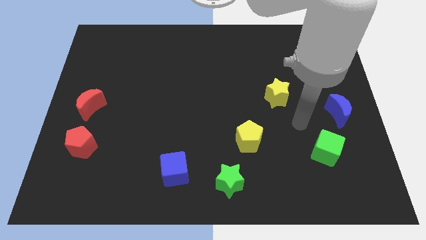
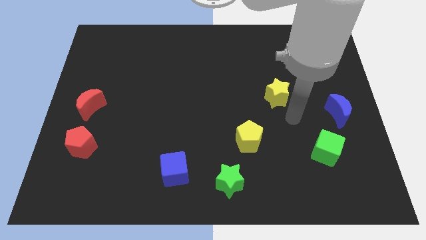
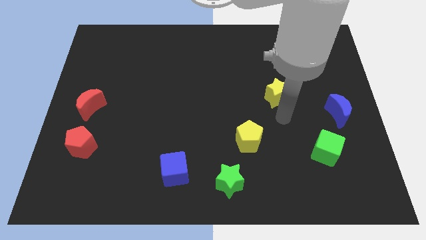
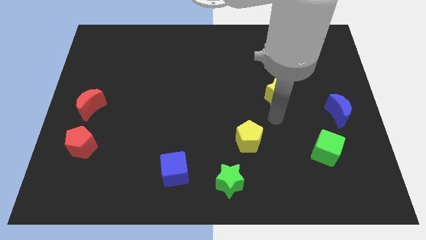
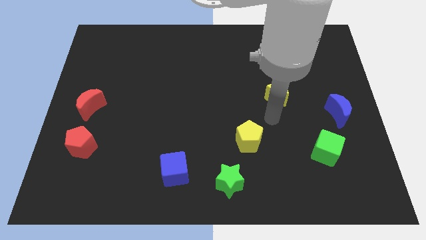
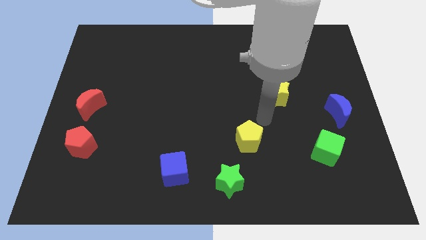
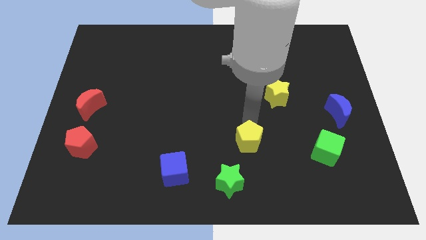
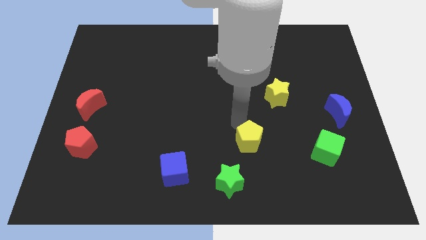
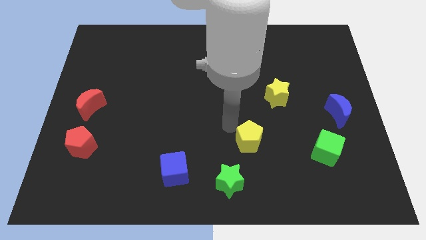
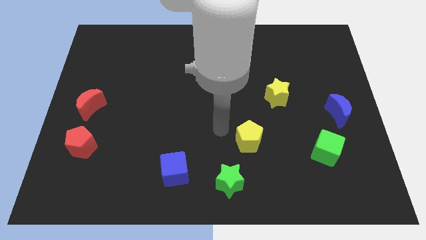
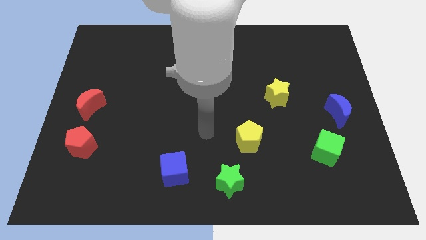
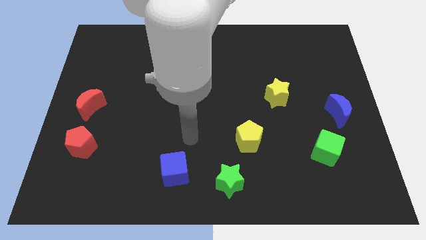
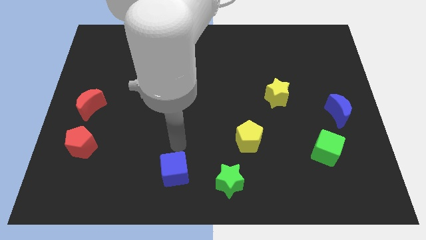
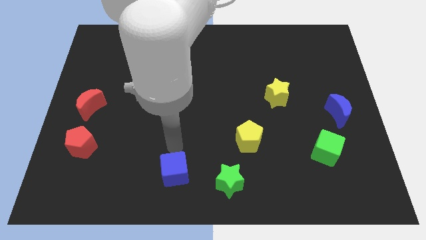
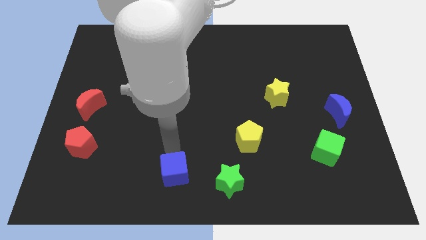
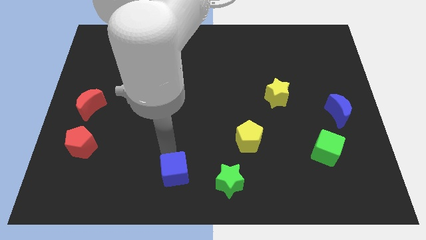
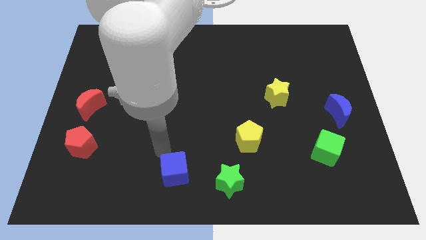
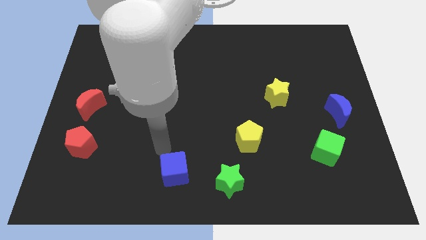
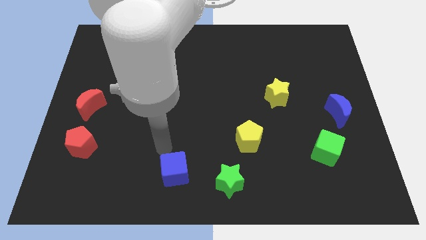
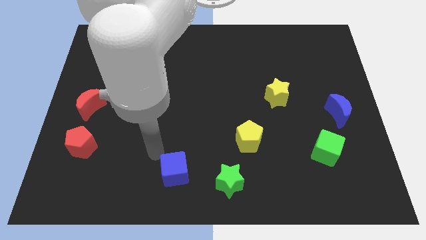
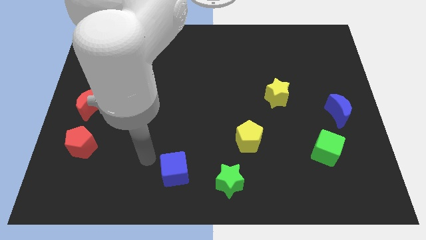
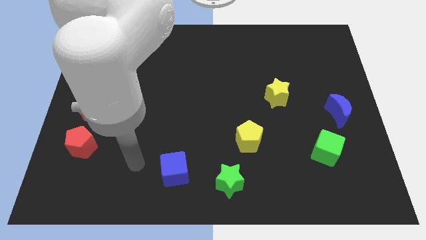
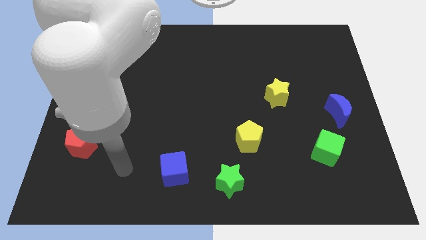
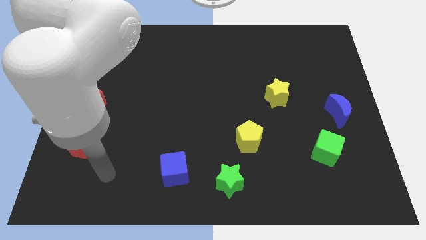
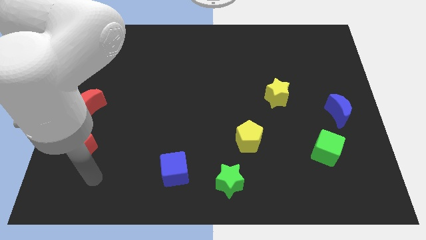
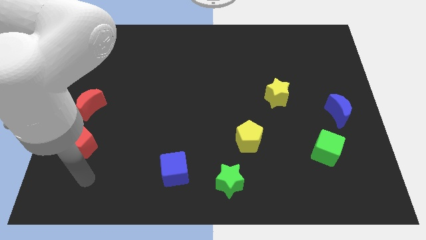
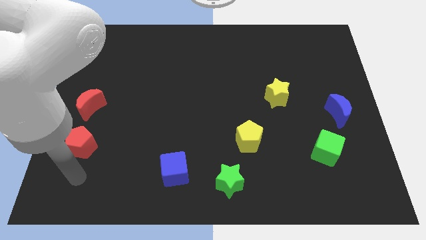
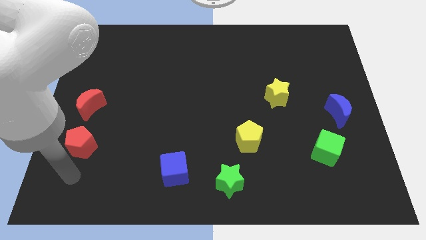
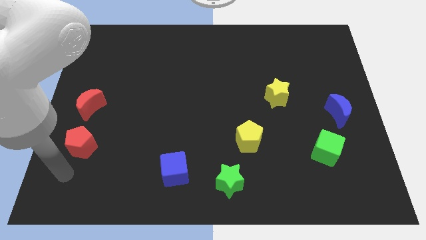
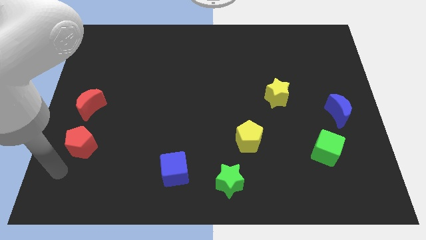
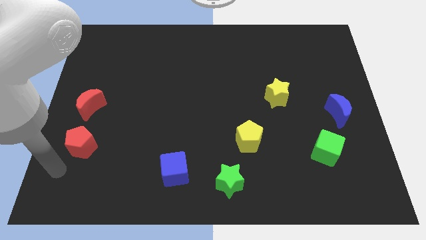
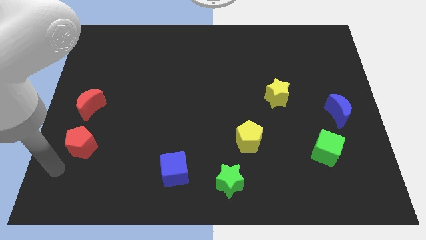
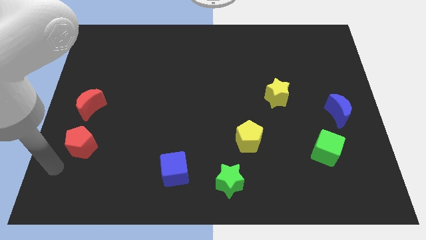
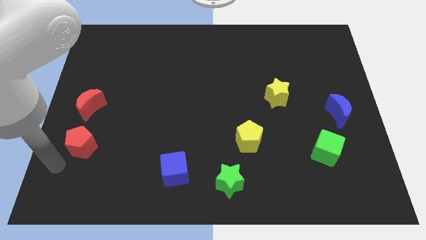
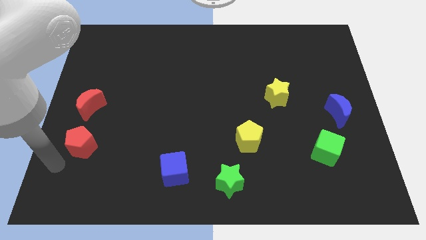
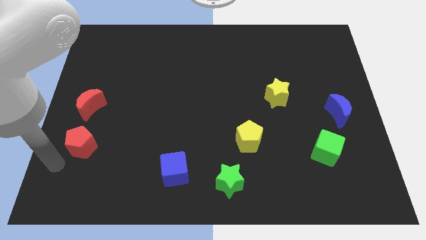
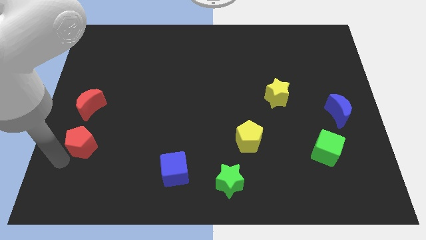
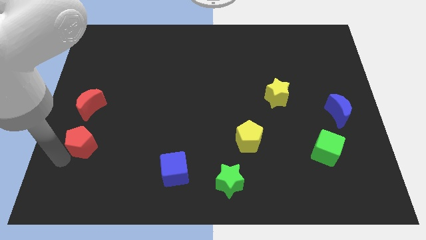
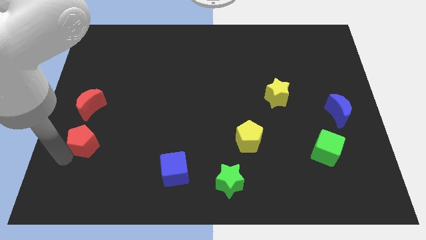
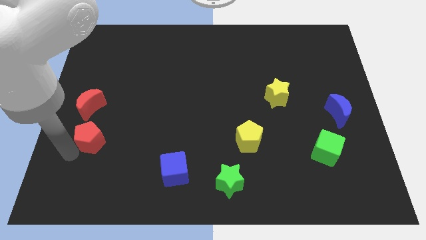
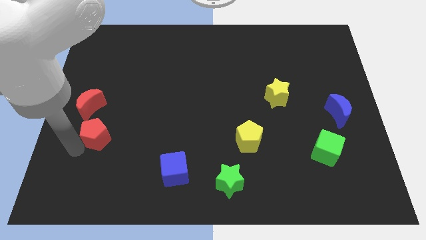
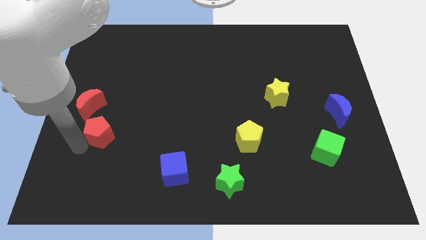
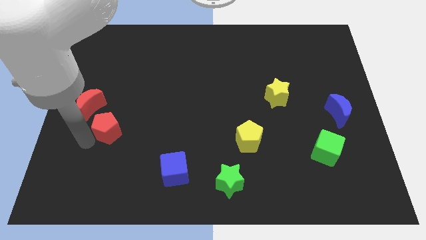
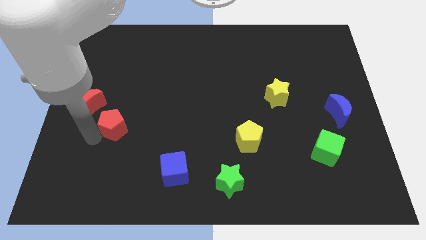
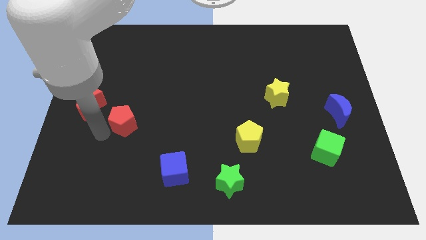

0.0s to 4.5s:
place the red pentagon to the right of red moon

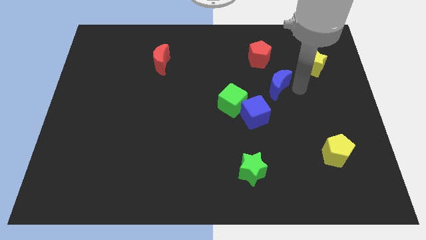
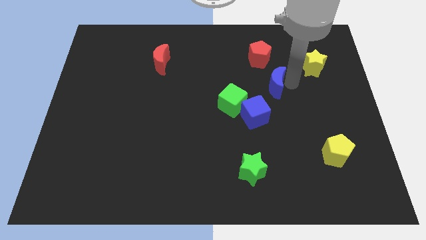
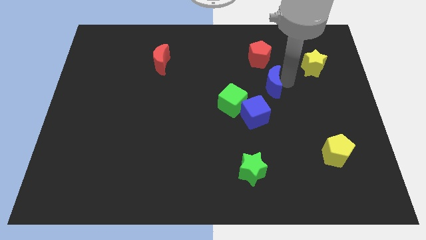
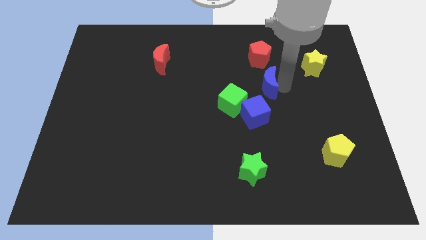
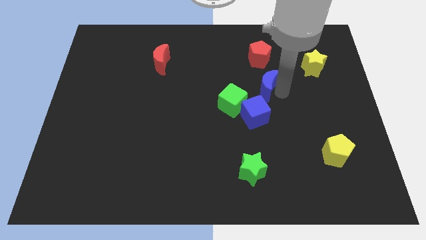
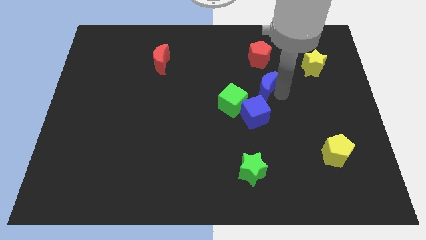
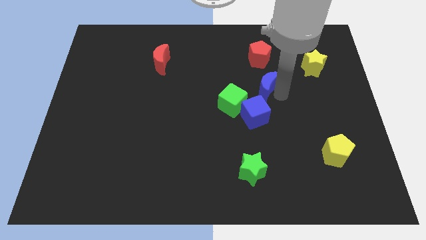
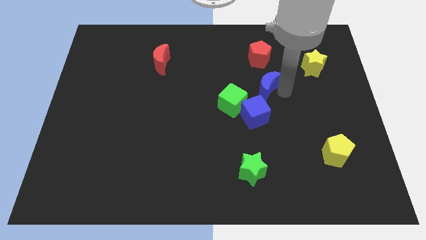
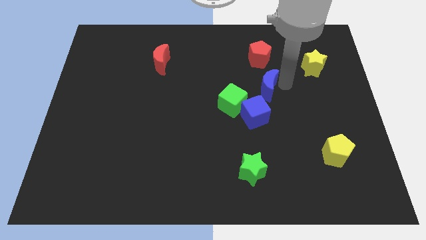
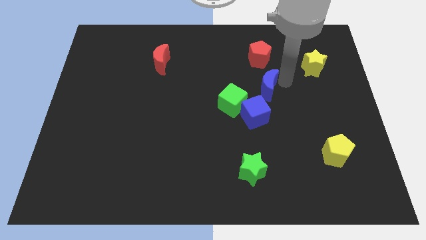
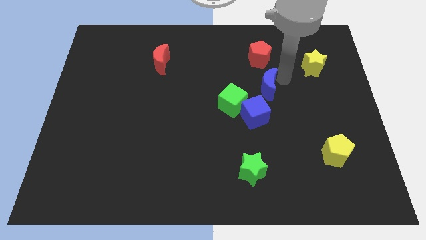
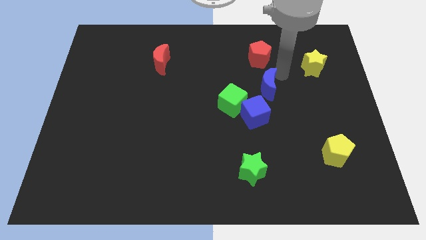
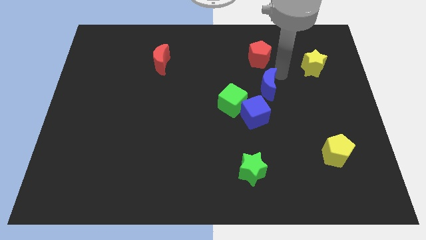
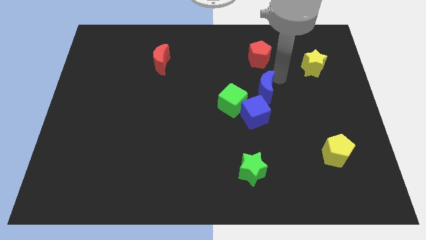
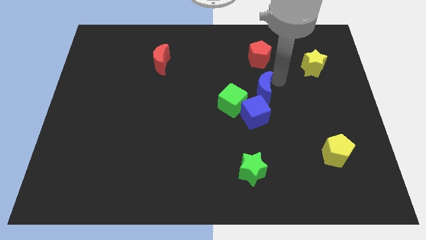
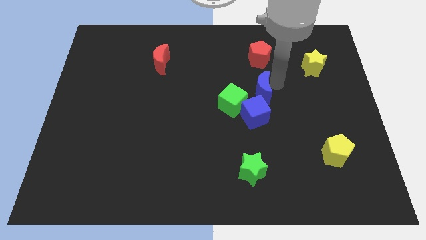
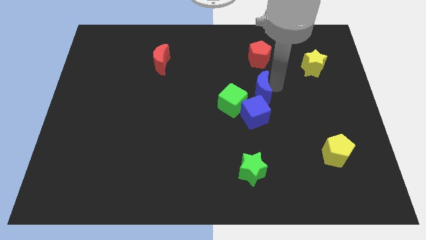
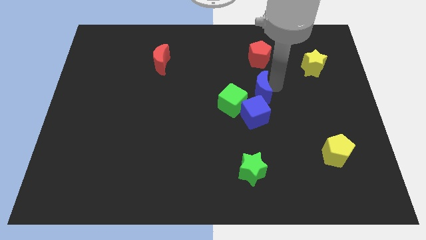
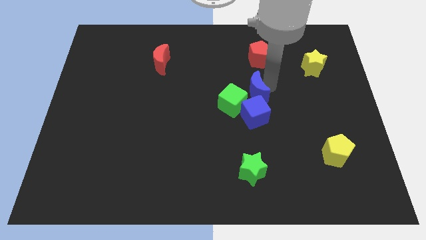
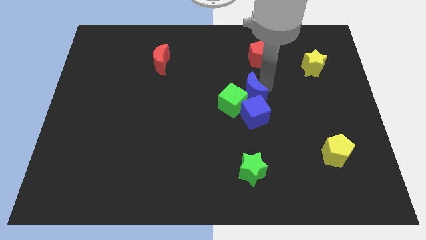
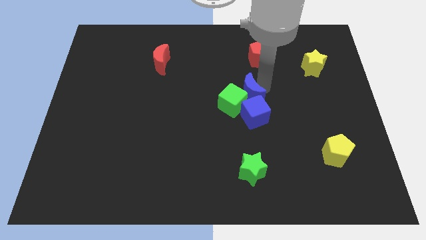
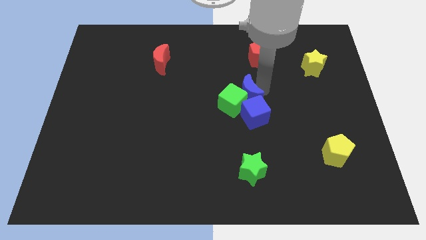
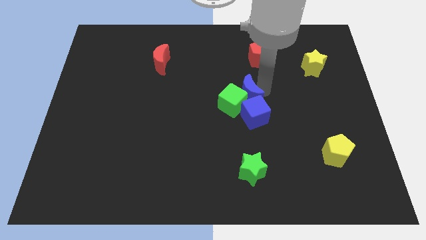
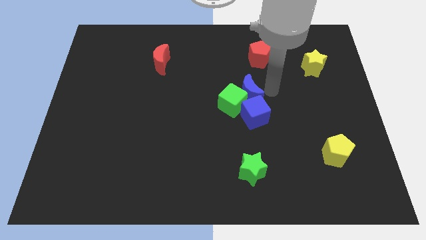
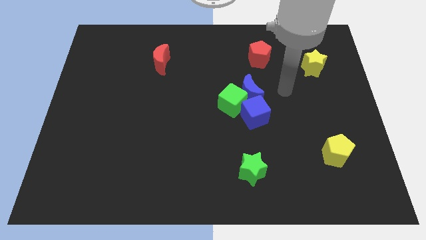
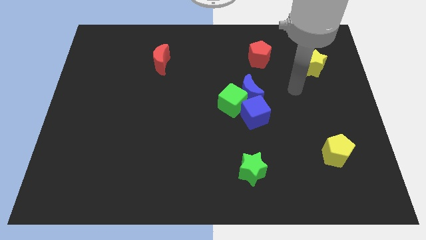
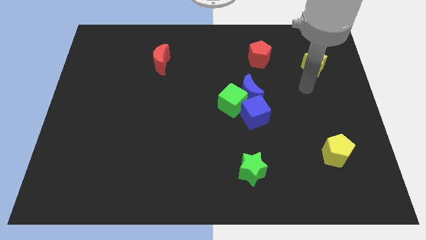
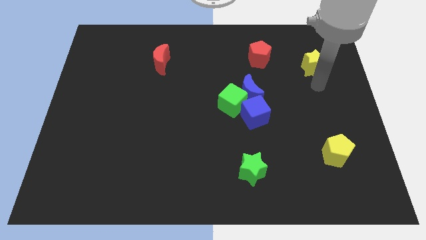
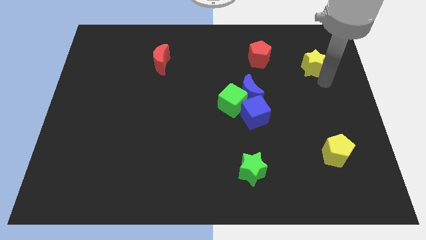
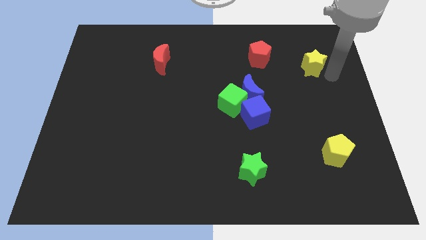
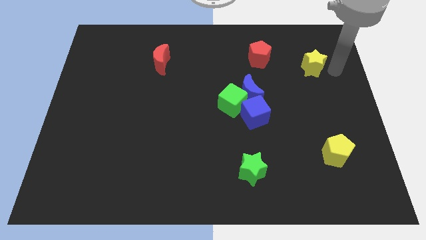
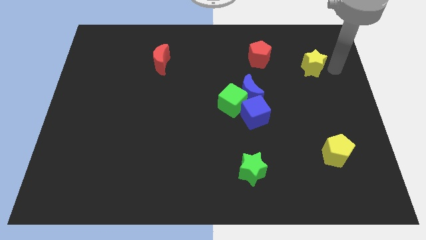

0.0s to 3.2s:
push the blue crescent into the green cube

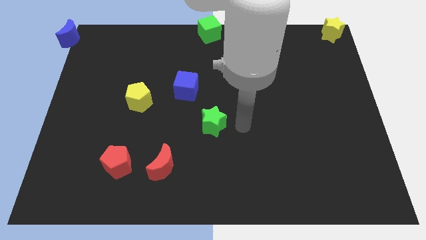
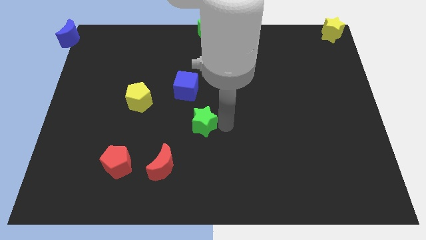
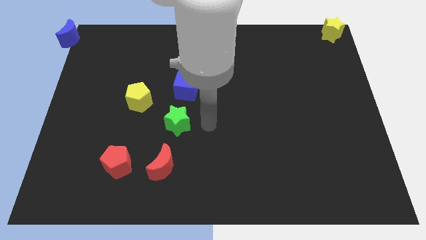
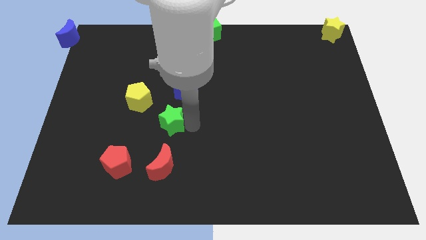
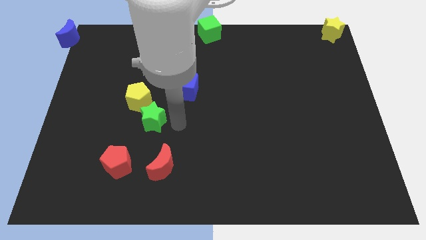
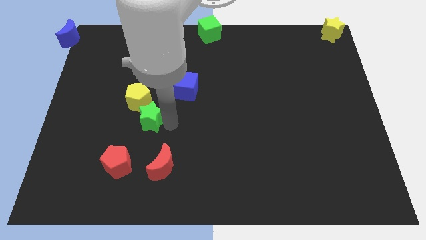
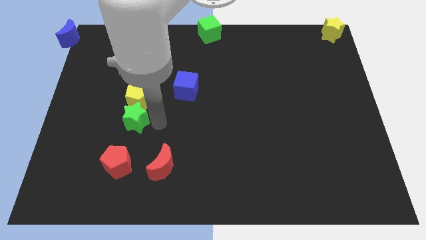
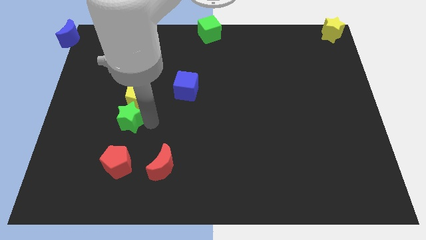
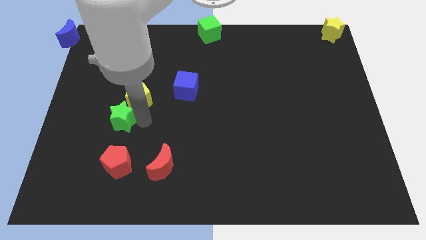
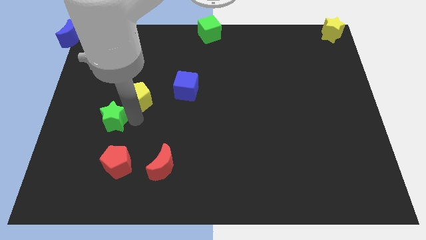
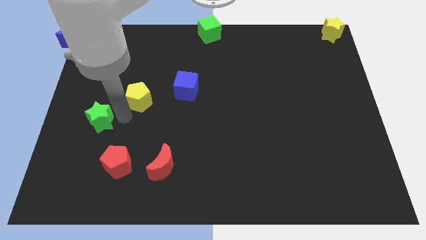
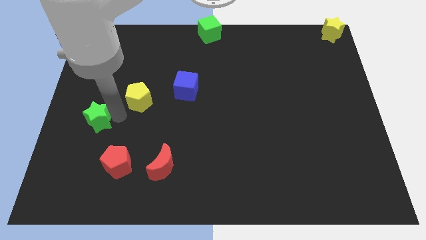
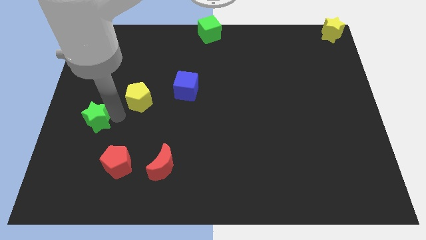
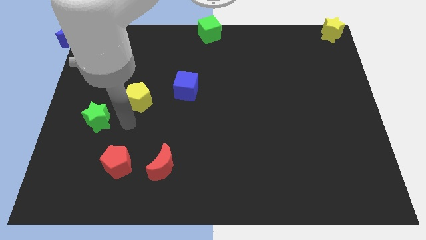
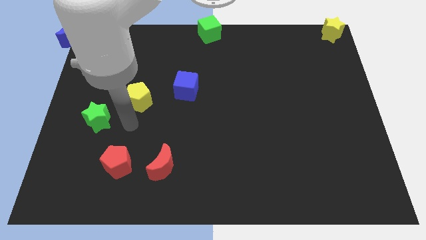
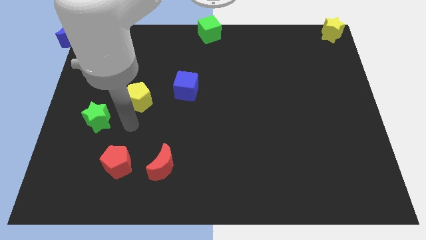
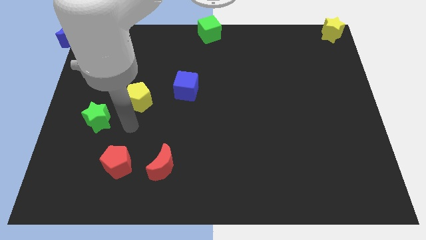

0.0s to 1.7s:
move the green star slightly to the left
